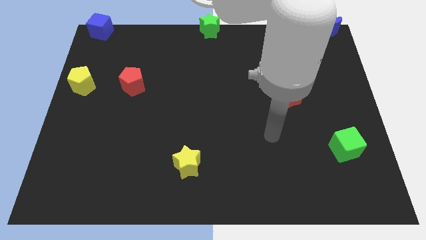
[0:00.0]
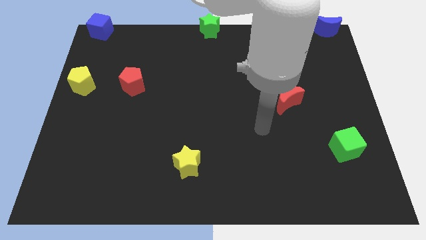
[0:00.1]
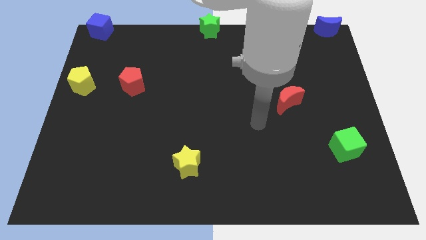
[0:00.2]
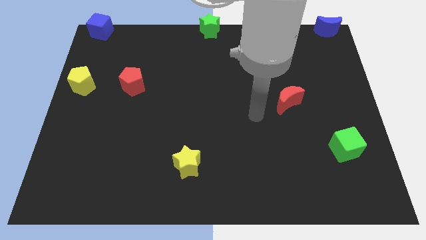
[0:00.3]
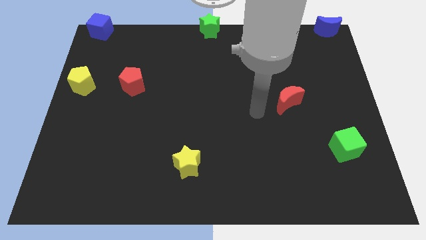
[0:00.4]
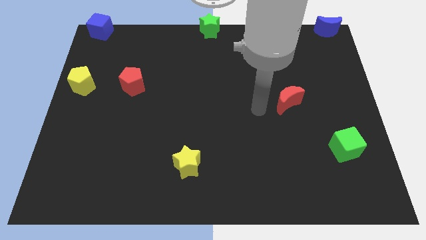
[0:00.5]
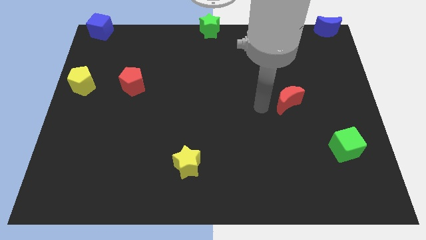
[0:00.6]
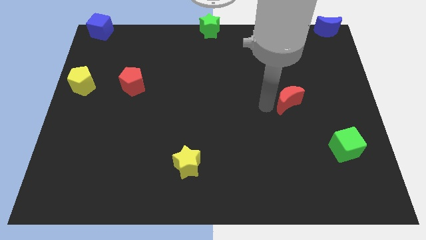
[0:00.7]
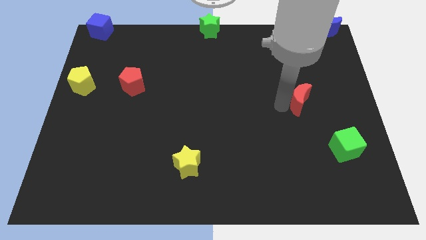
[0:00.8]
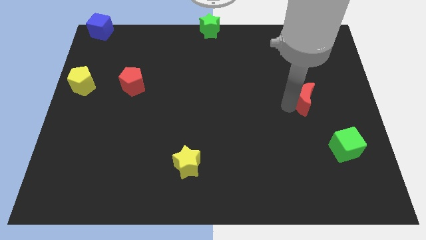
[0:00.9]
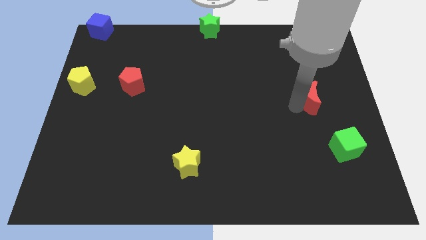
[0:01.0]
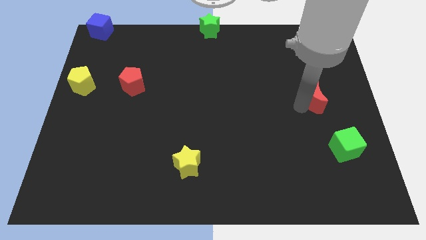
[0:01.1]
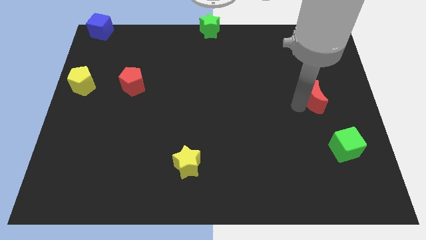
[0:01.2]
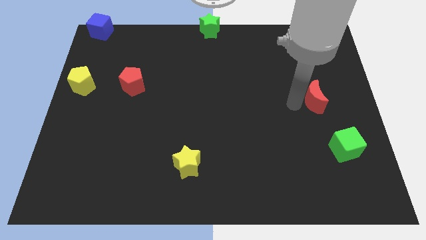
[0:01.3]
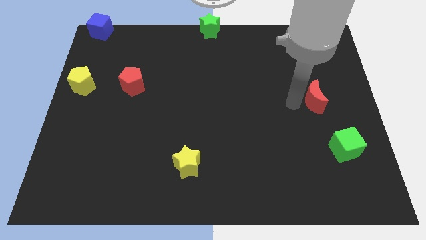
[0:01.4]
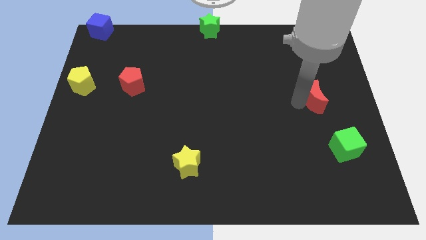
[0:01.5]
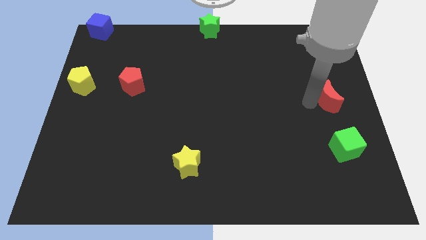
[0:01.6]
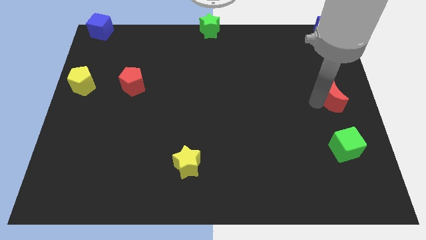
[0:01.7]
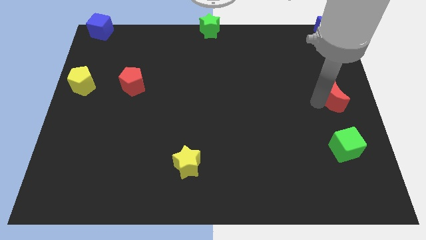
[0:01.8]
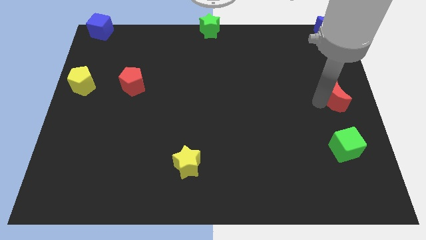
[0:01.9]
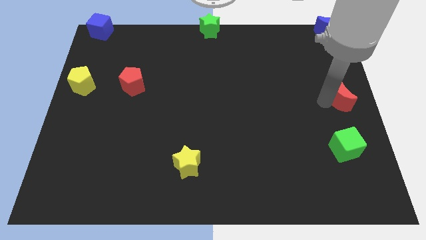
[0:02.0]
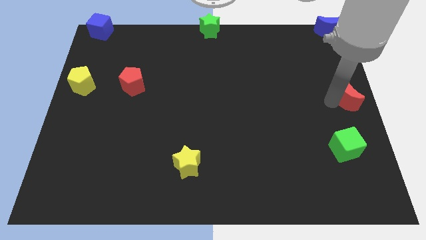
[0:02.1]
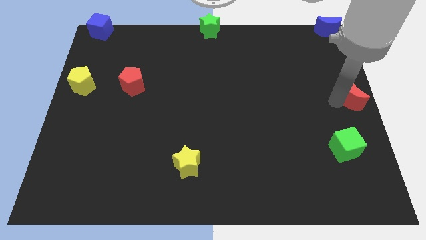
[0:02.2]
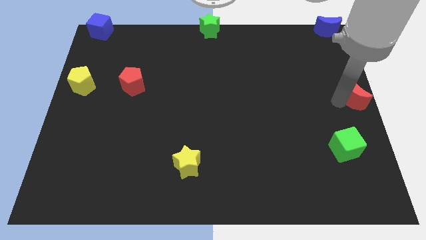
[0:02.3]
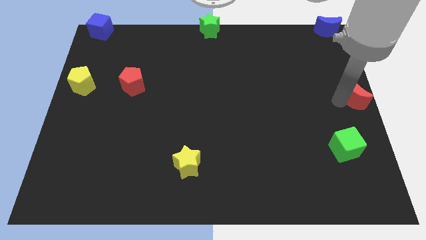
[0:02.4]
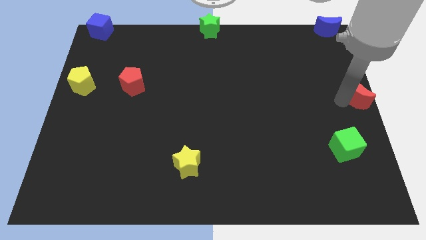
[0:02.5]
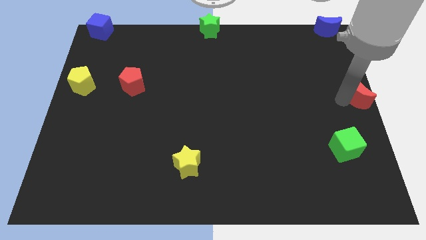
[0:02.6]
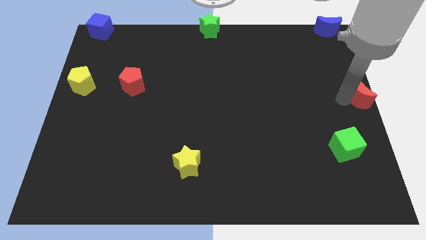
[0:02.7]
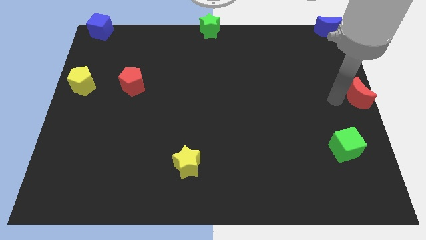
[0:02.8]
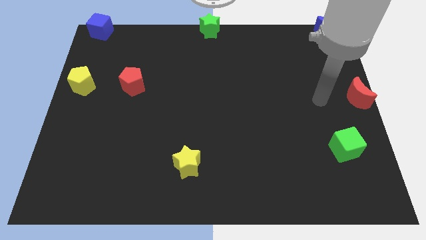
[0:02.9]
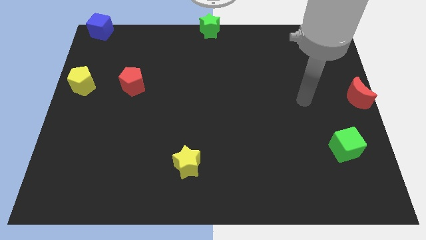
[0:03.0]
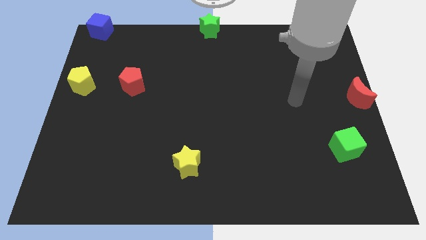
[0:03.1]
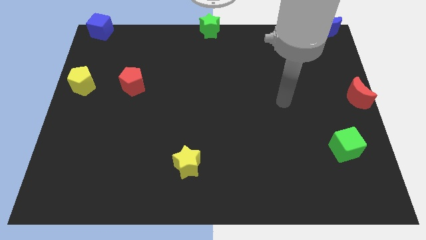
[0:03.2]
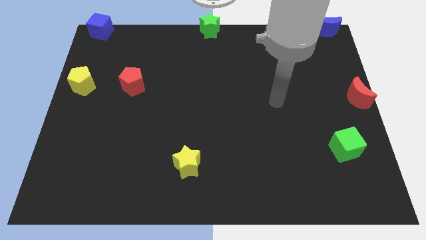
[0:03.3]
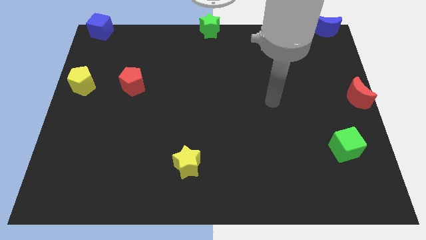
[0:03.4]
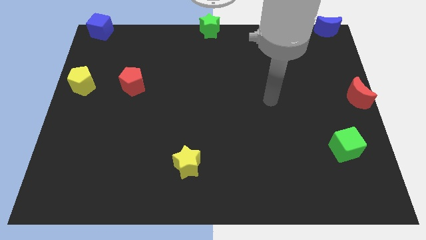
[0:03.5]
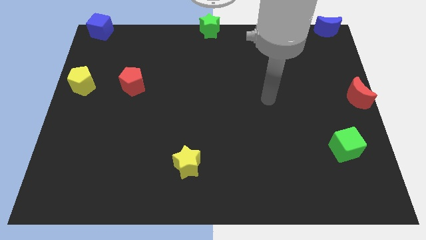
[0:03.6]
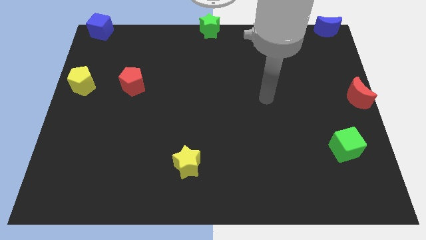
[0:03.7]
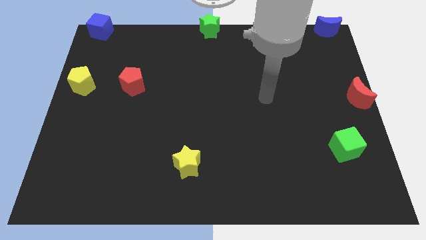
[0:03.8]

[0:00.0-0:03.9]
push the red moon to the middle right corner

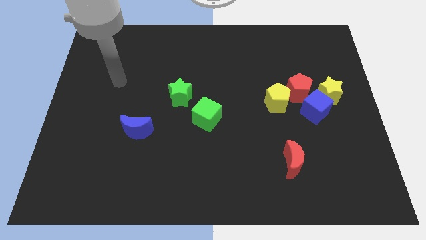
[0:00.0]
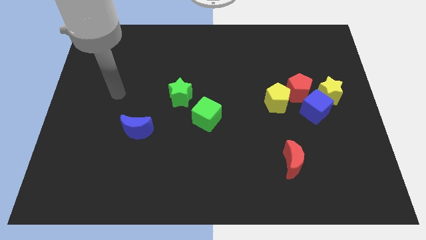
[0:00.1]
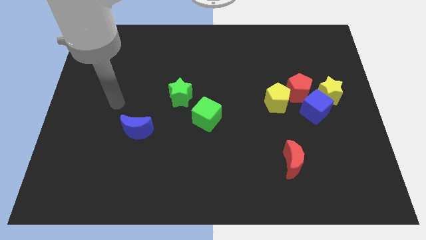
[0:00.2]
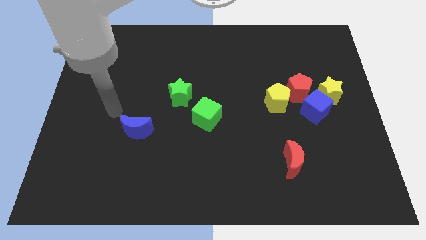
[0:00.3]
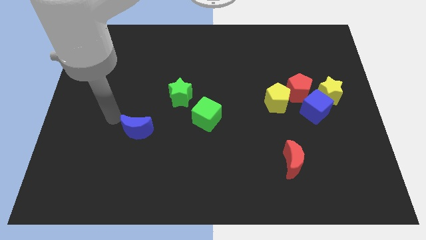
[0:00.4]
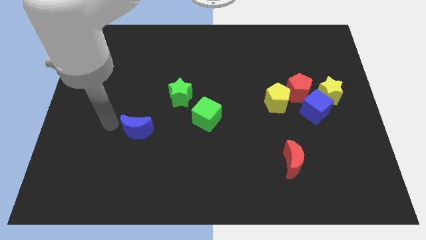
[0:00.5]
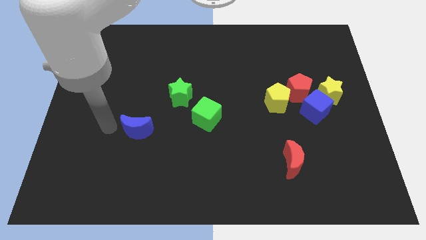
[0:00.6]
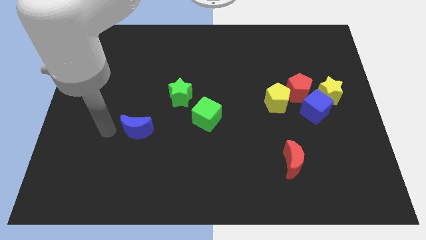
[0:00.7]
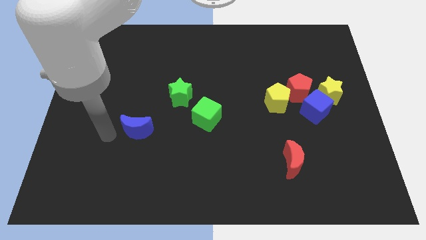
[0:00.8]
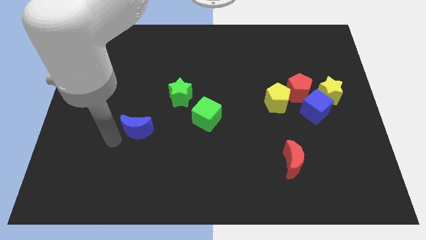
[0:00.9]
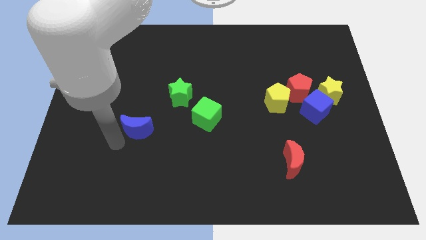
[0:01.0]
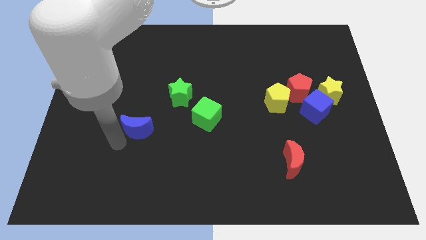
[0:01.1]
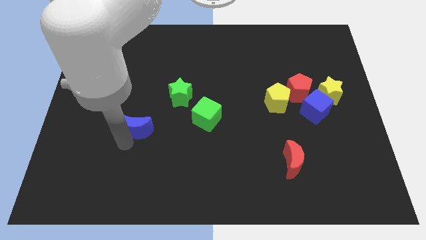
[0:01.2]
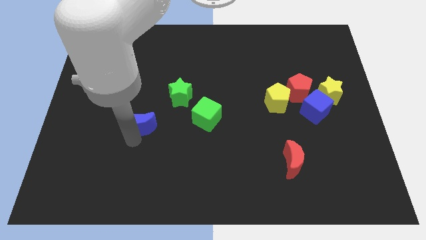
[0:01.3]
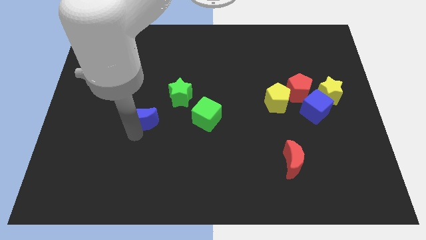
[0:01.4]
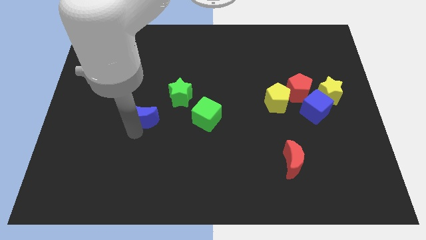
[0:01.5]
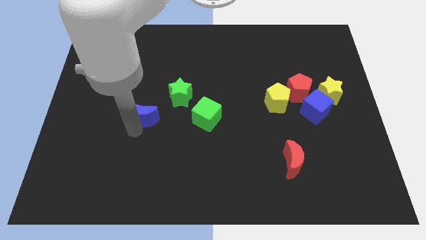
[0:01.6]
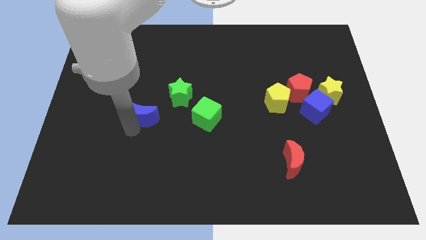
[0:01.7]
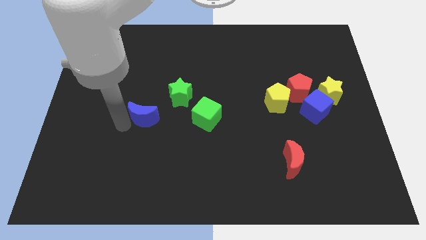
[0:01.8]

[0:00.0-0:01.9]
move the blue moon to the bottom left side of the green star

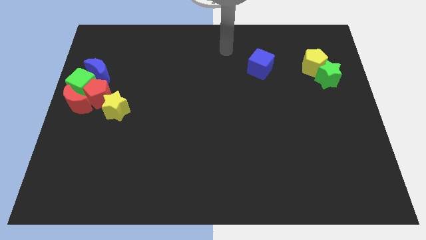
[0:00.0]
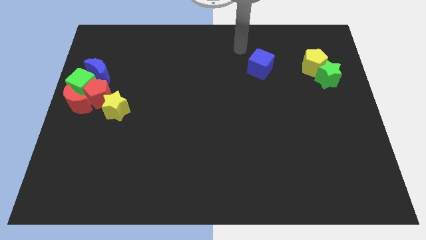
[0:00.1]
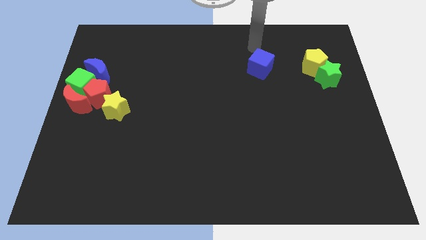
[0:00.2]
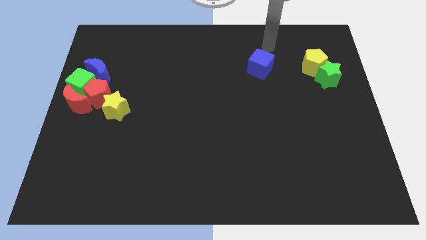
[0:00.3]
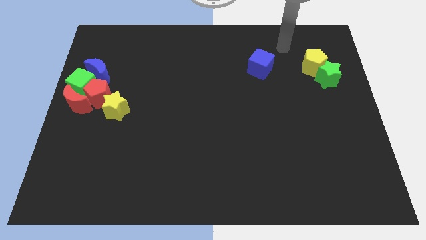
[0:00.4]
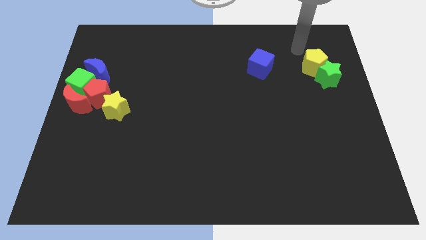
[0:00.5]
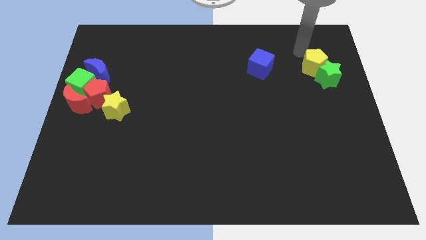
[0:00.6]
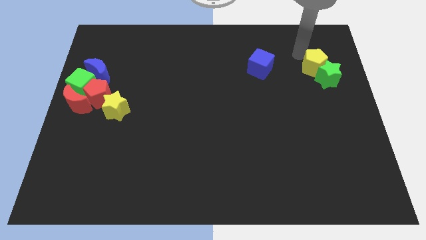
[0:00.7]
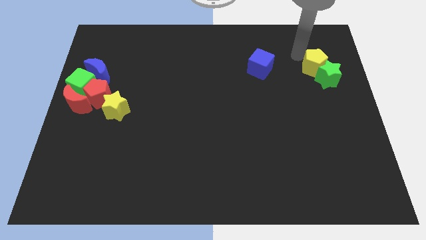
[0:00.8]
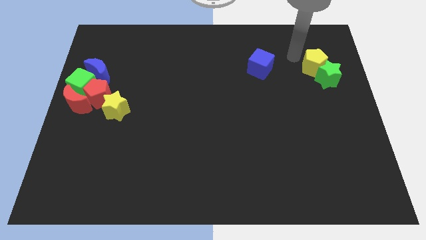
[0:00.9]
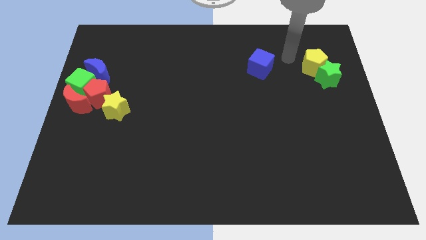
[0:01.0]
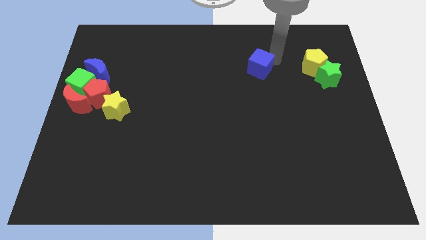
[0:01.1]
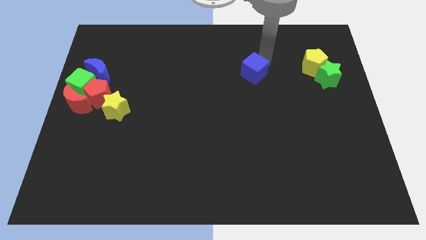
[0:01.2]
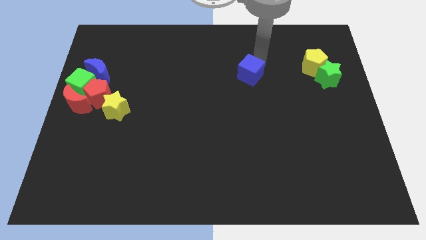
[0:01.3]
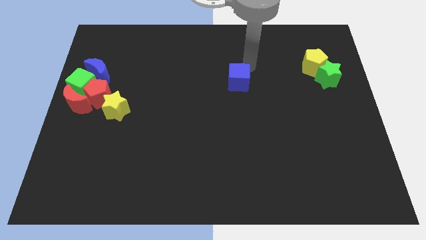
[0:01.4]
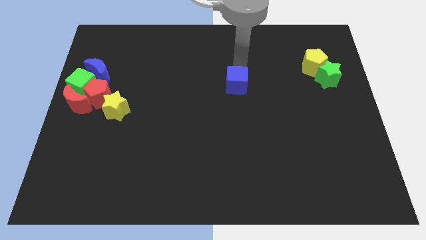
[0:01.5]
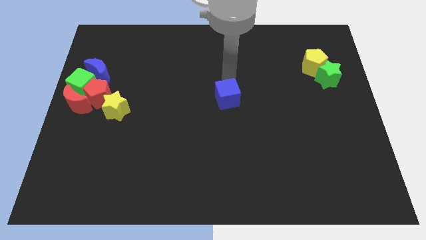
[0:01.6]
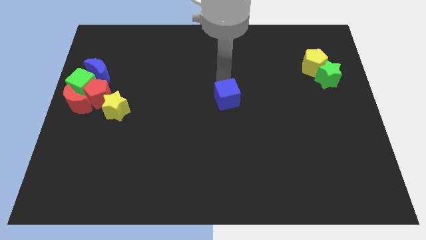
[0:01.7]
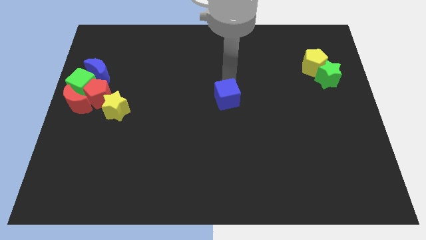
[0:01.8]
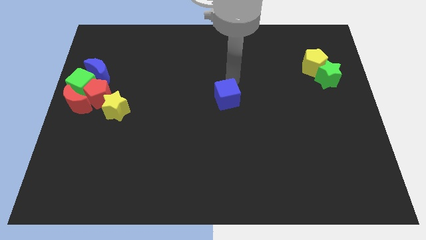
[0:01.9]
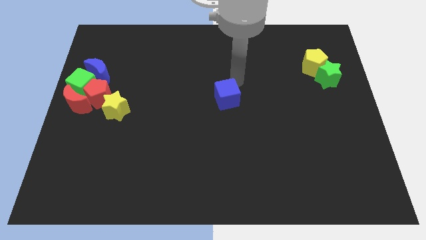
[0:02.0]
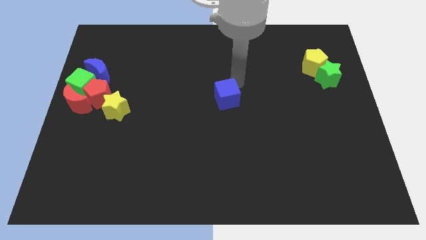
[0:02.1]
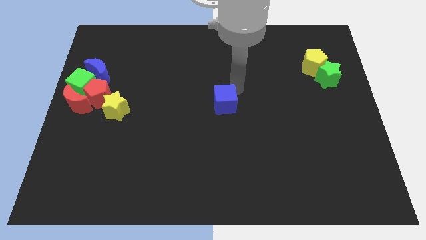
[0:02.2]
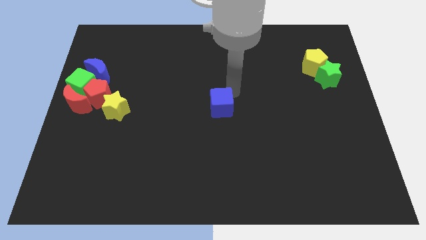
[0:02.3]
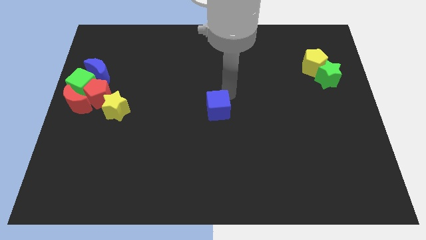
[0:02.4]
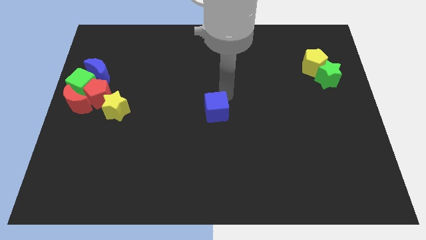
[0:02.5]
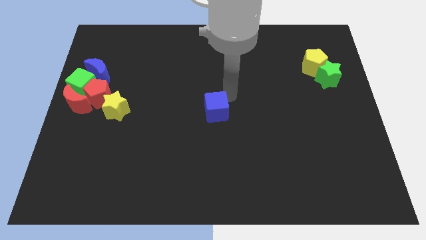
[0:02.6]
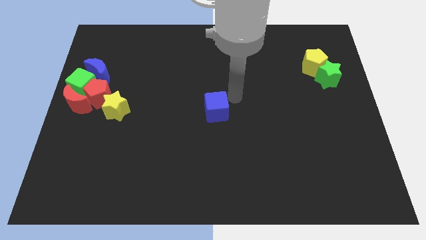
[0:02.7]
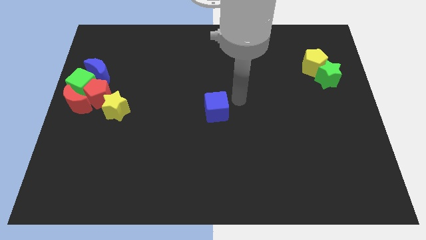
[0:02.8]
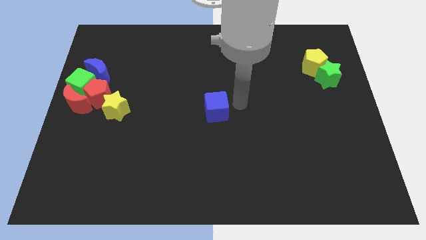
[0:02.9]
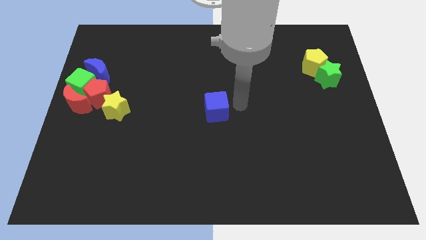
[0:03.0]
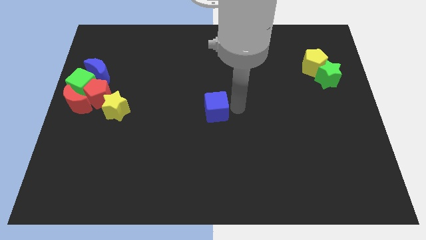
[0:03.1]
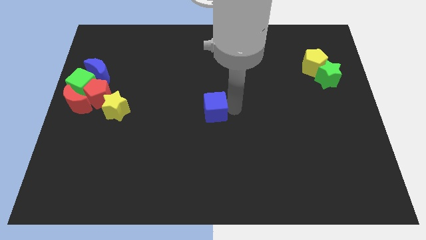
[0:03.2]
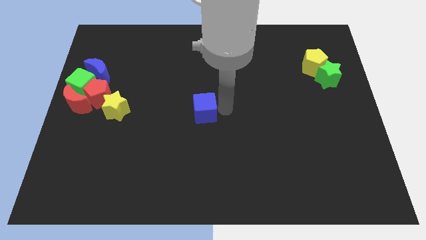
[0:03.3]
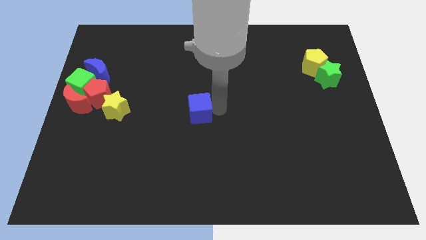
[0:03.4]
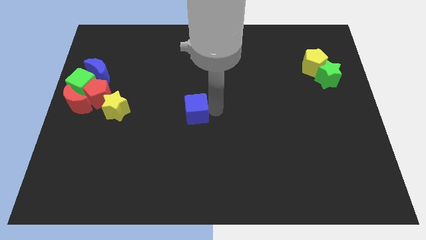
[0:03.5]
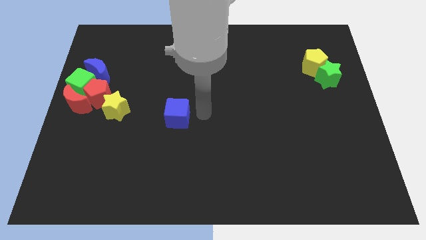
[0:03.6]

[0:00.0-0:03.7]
place the blue cube parallel to the yellow star
